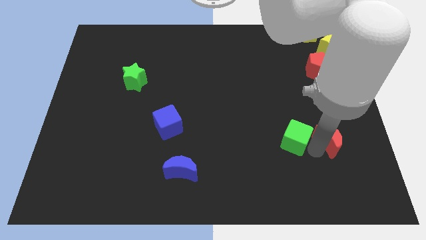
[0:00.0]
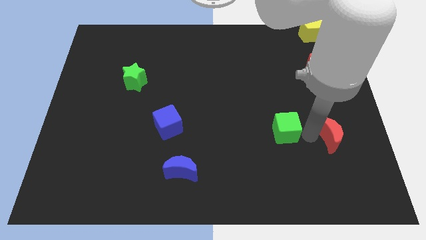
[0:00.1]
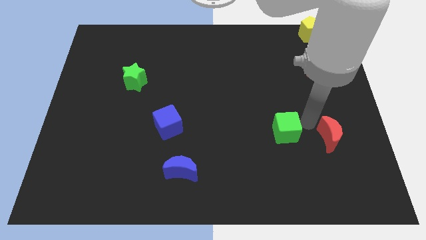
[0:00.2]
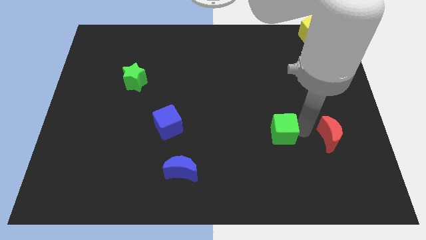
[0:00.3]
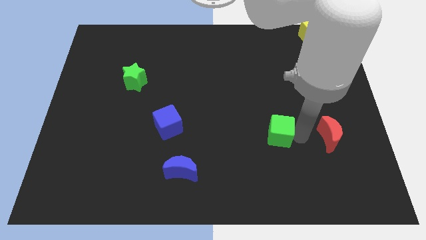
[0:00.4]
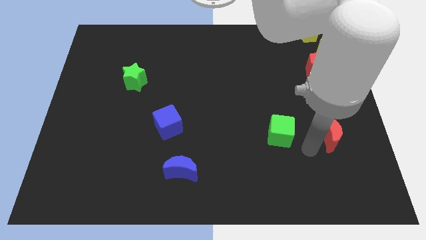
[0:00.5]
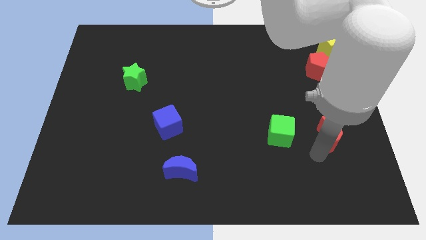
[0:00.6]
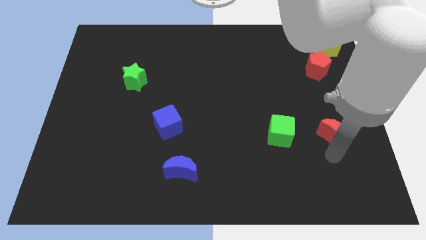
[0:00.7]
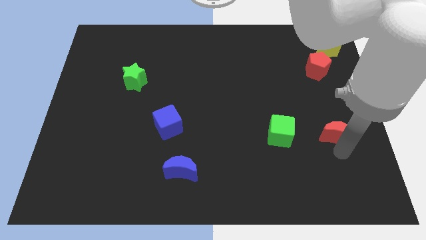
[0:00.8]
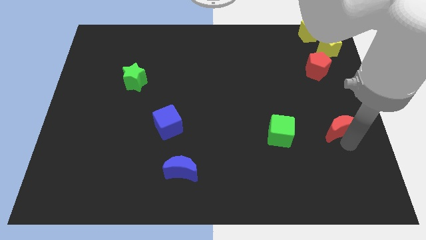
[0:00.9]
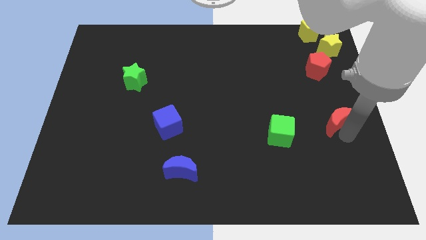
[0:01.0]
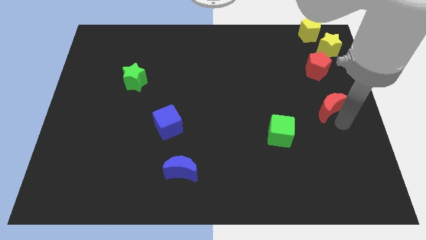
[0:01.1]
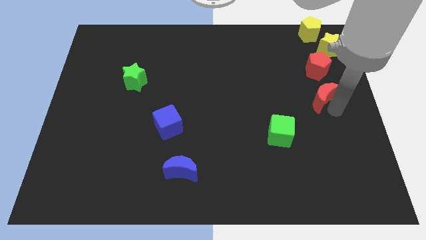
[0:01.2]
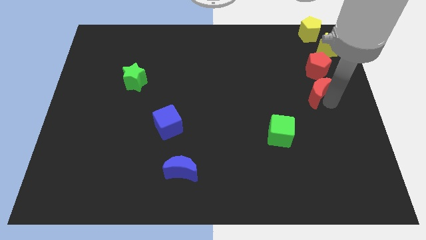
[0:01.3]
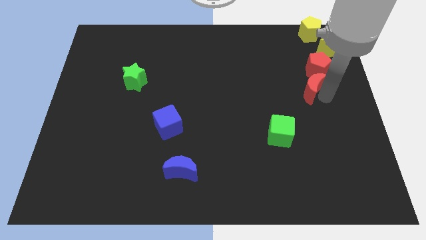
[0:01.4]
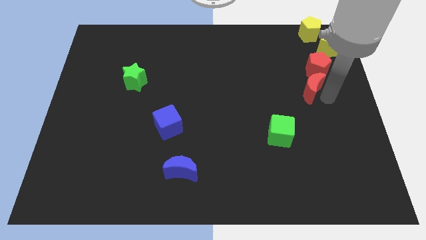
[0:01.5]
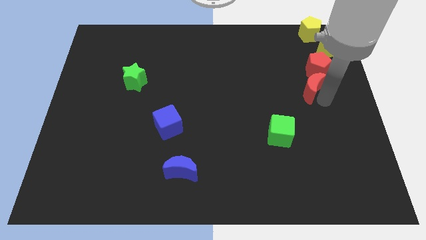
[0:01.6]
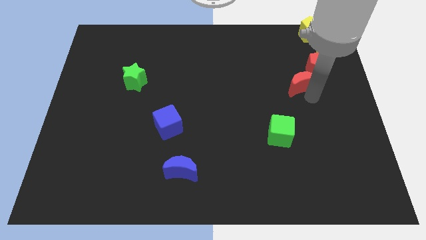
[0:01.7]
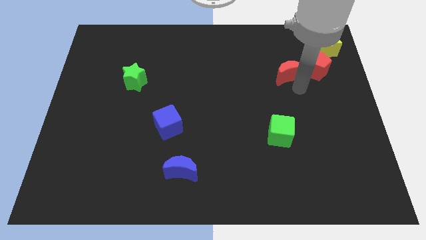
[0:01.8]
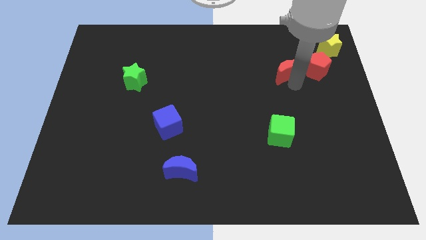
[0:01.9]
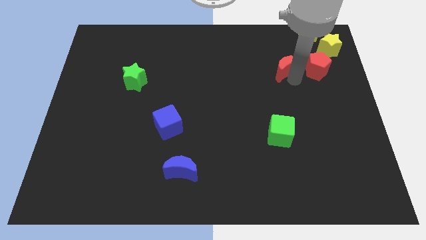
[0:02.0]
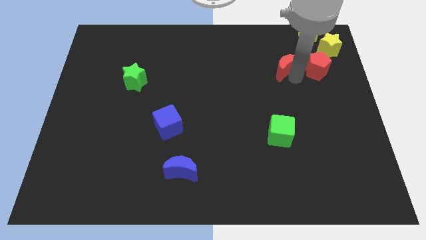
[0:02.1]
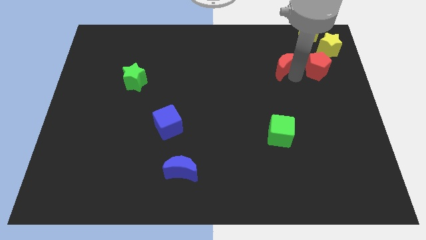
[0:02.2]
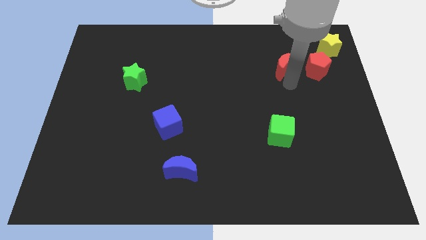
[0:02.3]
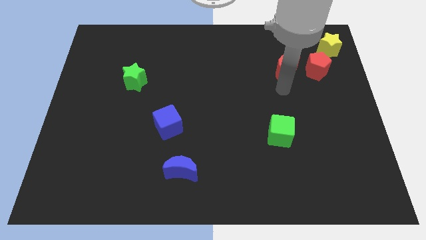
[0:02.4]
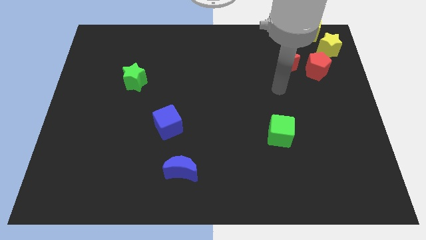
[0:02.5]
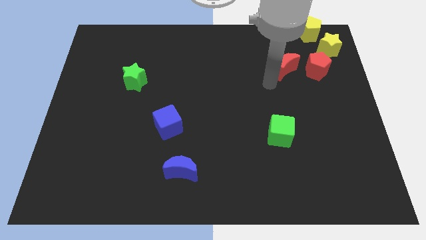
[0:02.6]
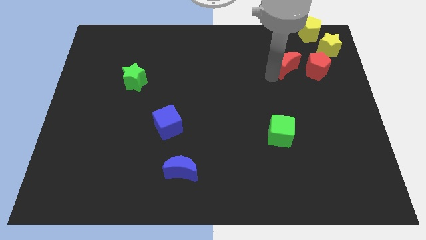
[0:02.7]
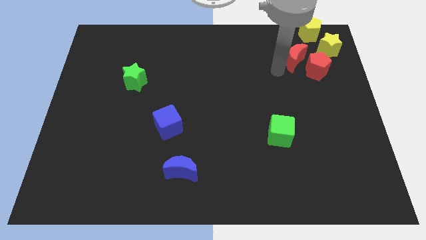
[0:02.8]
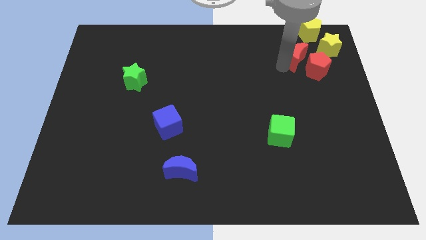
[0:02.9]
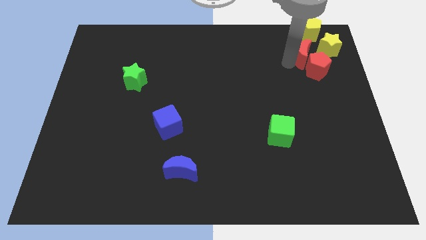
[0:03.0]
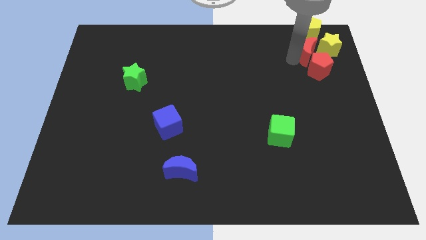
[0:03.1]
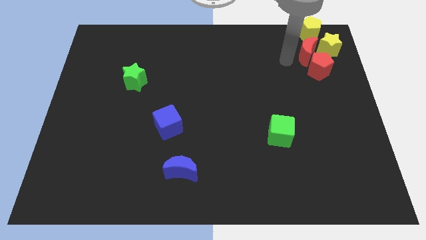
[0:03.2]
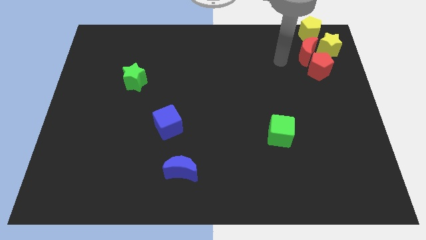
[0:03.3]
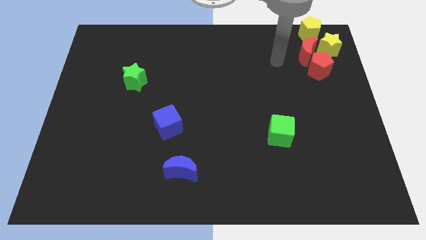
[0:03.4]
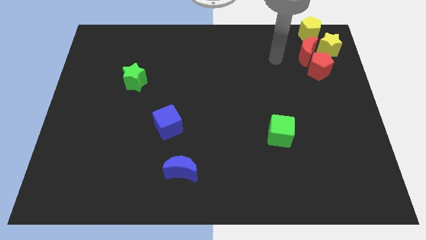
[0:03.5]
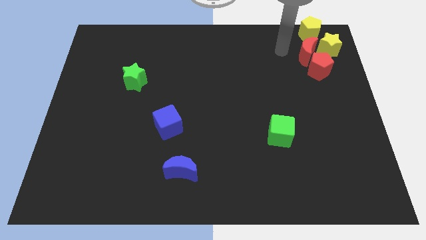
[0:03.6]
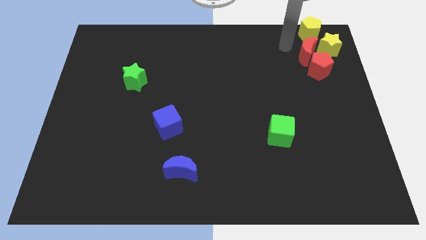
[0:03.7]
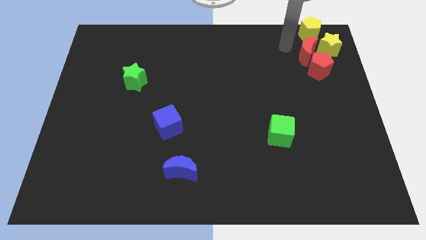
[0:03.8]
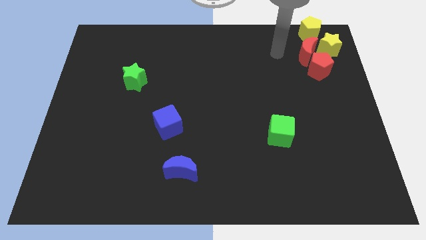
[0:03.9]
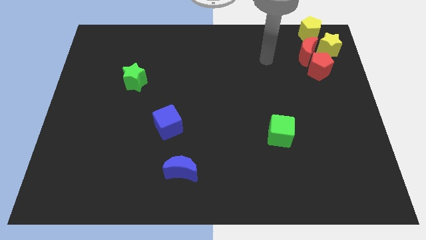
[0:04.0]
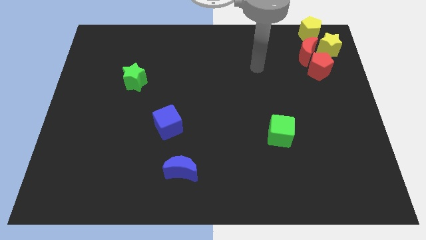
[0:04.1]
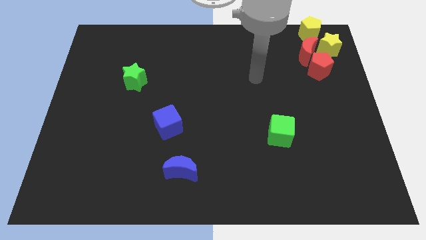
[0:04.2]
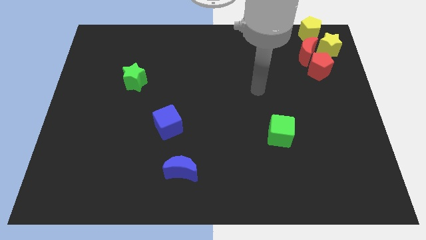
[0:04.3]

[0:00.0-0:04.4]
push the red crescent to the top right corner

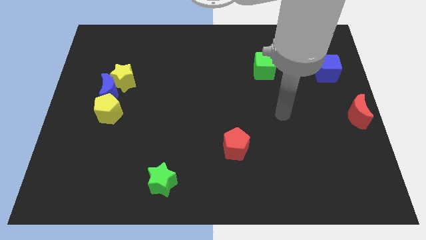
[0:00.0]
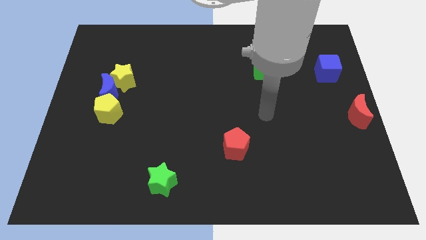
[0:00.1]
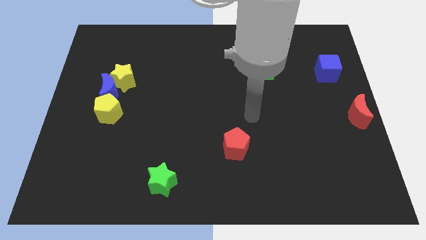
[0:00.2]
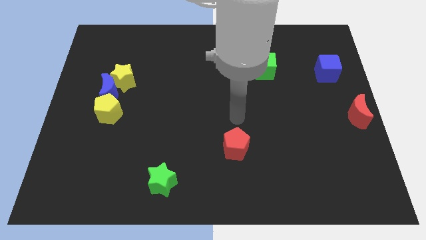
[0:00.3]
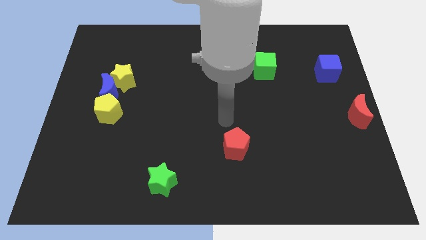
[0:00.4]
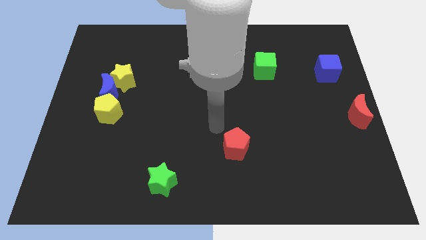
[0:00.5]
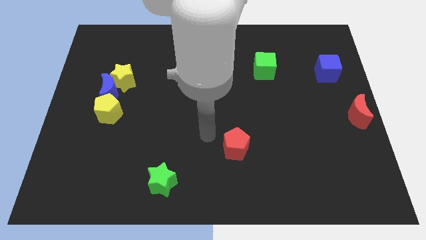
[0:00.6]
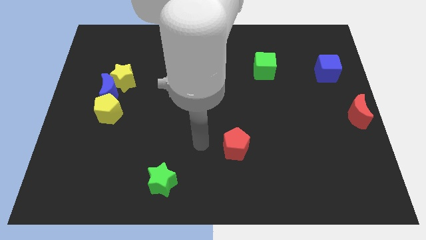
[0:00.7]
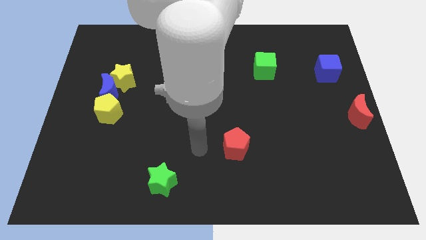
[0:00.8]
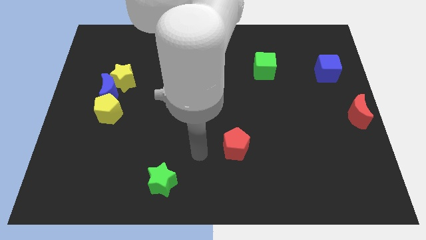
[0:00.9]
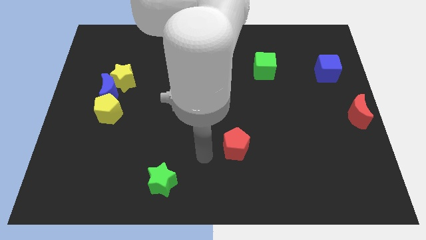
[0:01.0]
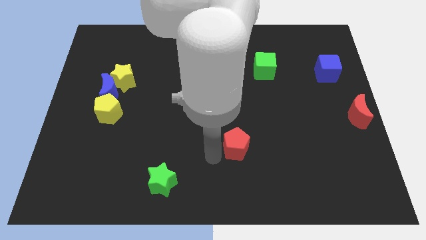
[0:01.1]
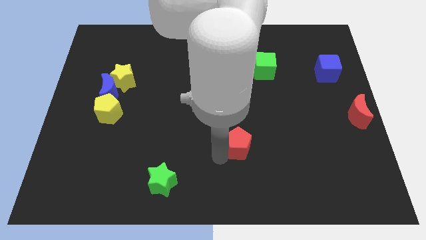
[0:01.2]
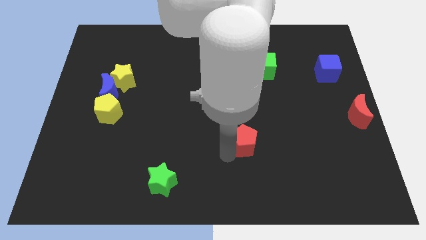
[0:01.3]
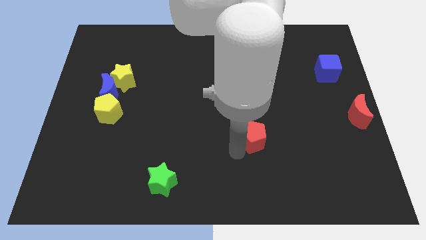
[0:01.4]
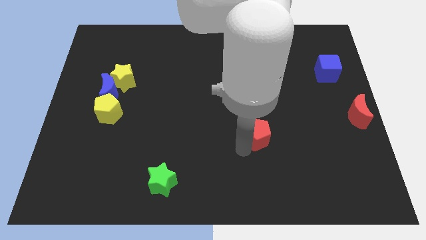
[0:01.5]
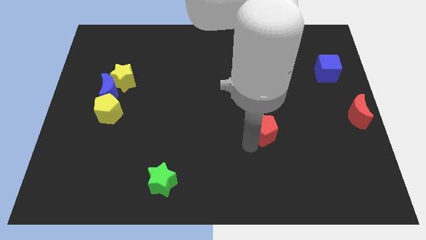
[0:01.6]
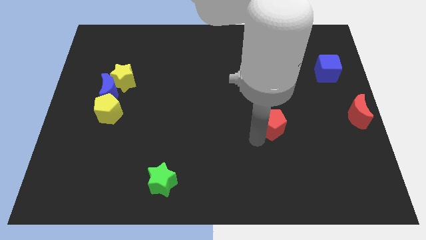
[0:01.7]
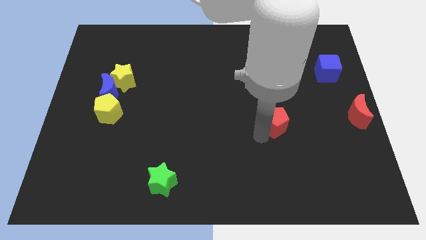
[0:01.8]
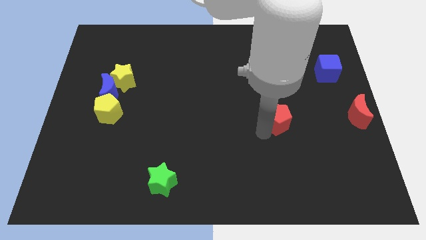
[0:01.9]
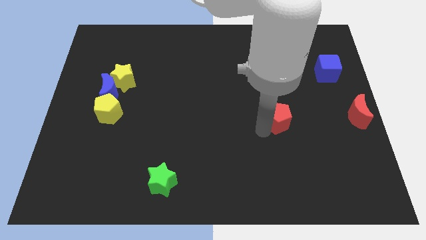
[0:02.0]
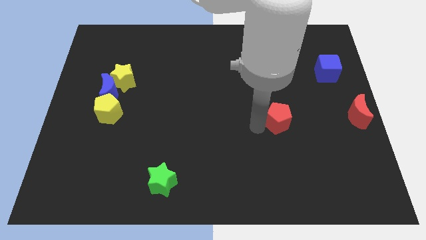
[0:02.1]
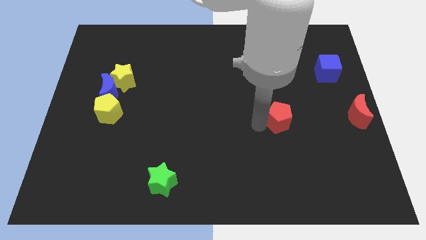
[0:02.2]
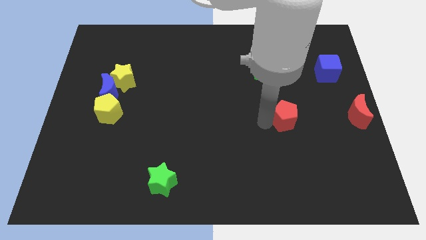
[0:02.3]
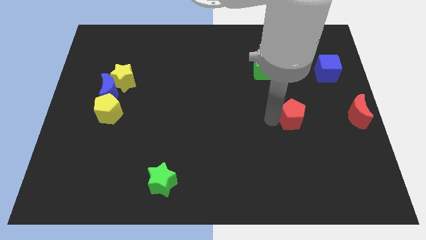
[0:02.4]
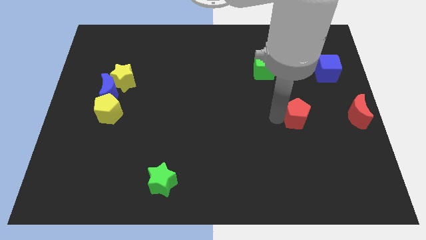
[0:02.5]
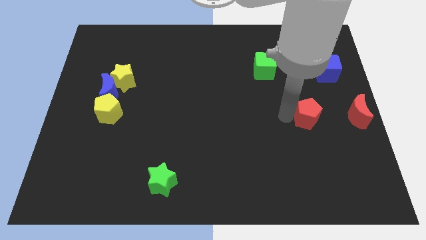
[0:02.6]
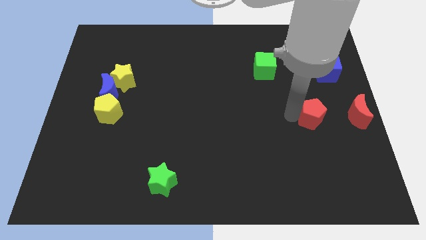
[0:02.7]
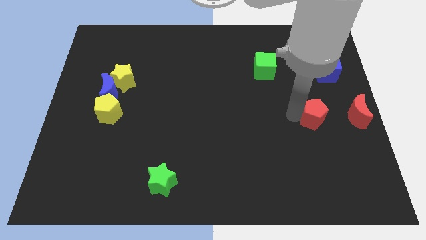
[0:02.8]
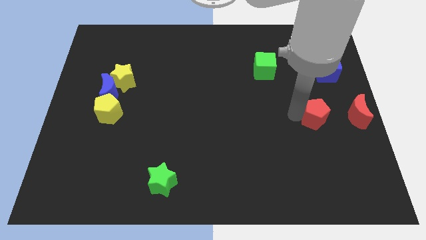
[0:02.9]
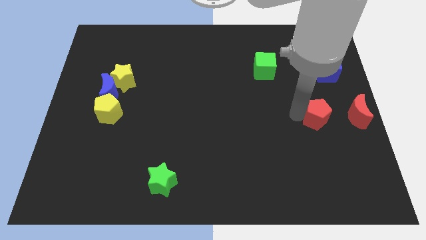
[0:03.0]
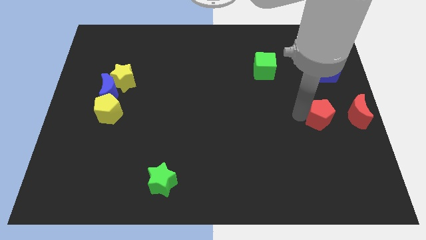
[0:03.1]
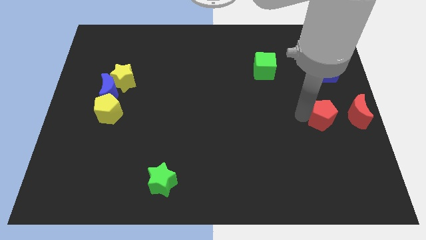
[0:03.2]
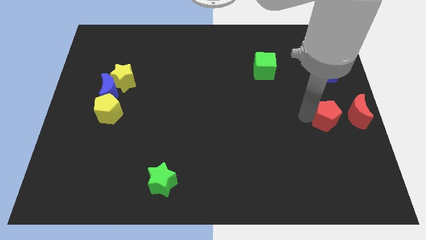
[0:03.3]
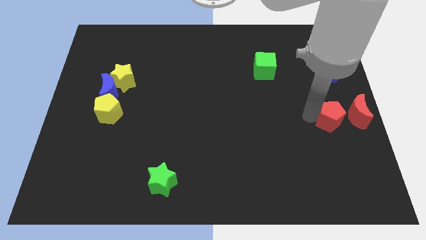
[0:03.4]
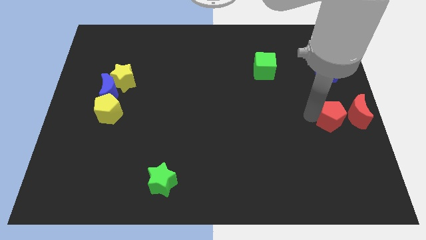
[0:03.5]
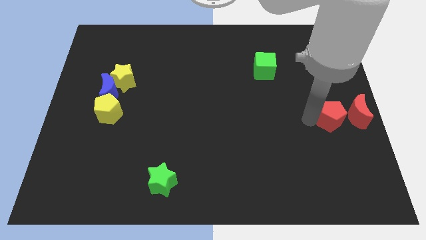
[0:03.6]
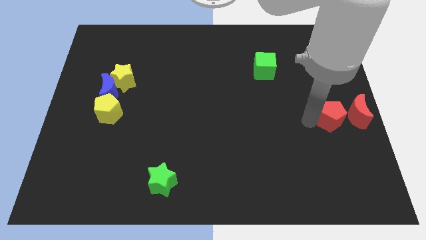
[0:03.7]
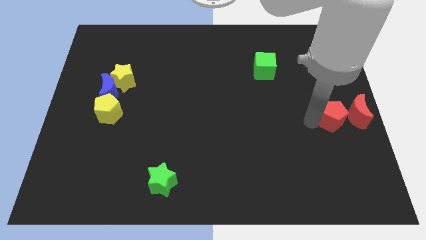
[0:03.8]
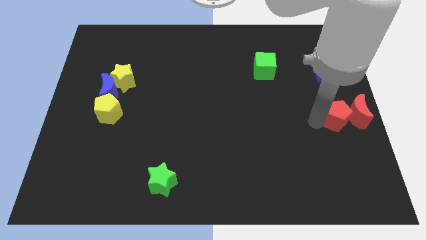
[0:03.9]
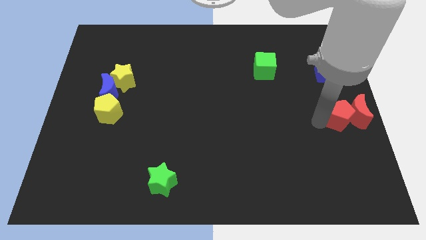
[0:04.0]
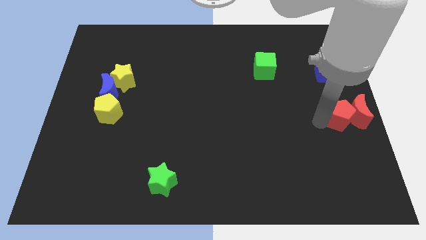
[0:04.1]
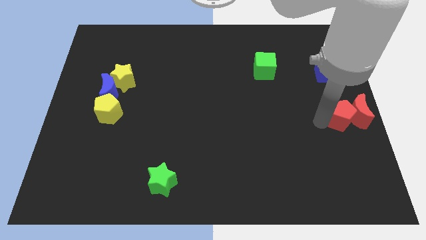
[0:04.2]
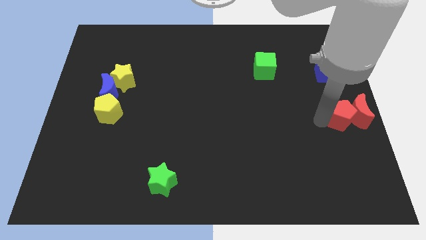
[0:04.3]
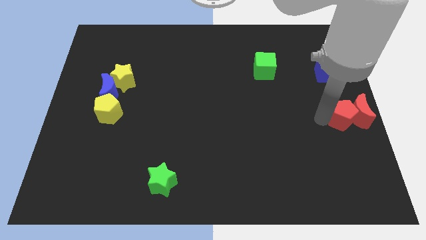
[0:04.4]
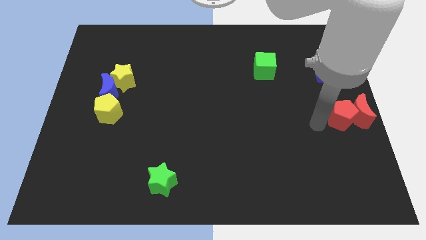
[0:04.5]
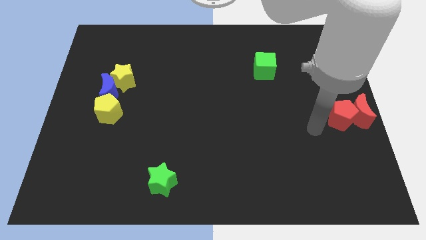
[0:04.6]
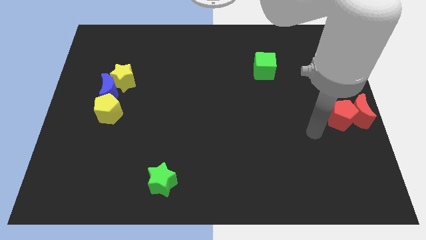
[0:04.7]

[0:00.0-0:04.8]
move red pentagon into the red moon
